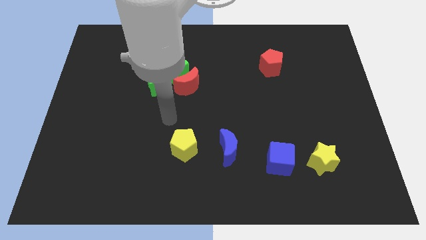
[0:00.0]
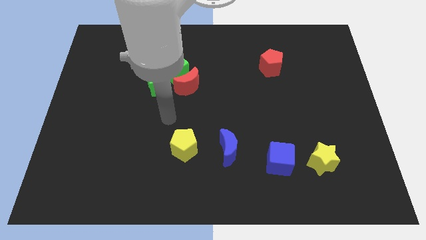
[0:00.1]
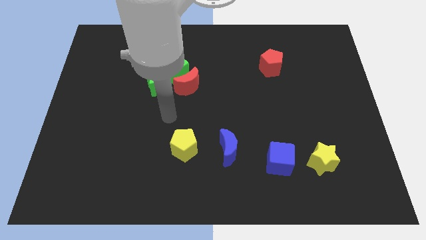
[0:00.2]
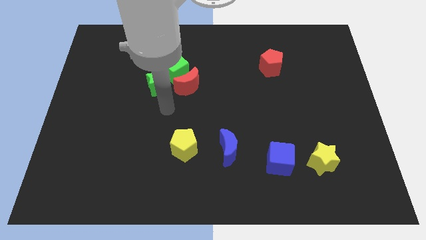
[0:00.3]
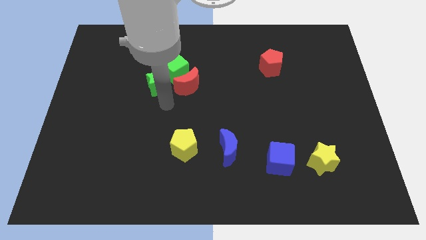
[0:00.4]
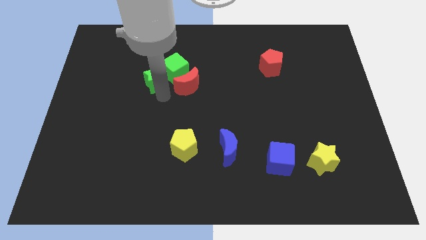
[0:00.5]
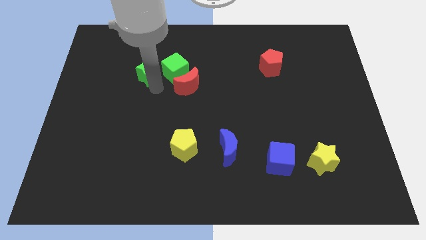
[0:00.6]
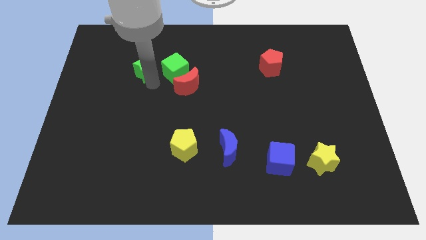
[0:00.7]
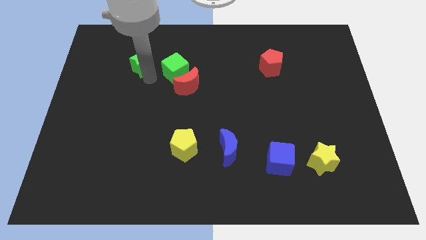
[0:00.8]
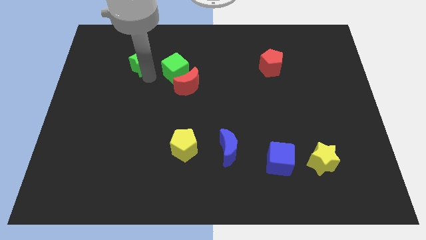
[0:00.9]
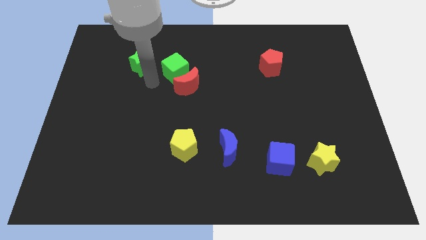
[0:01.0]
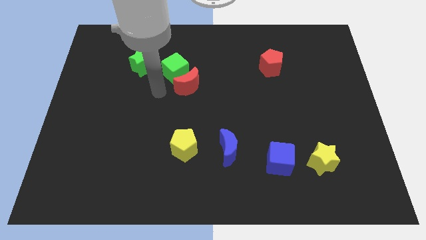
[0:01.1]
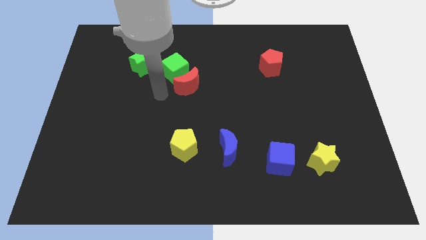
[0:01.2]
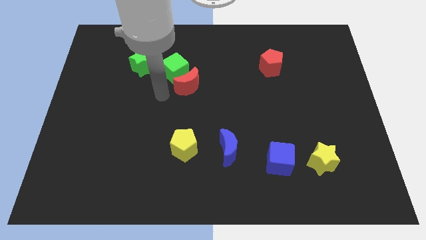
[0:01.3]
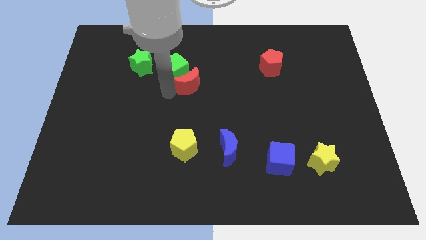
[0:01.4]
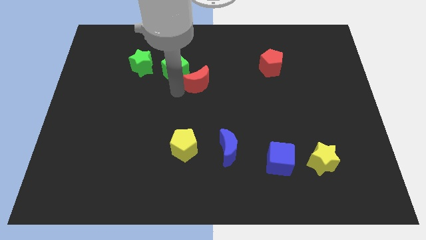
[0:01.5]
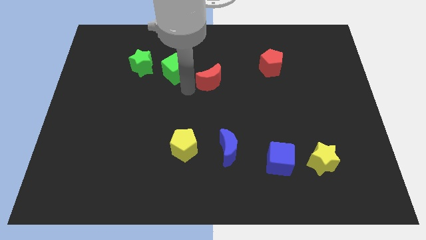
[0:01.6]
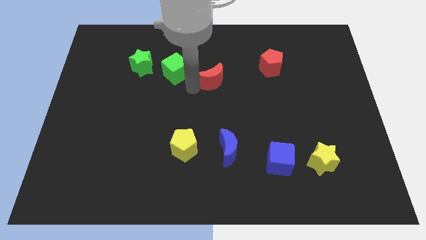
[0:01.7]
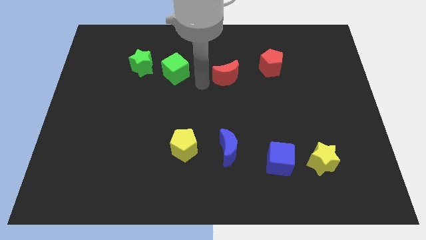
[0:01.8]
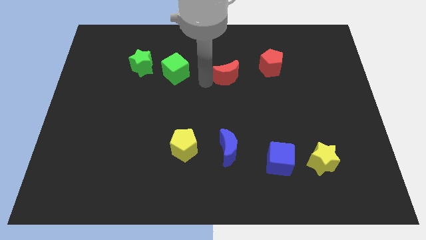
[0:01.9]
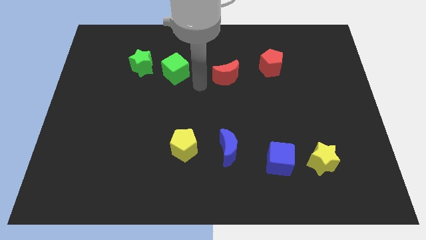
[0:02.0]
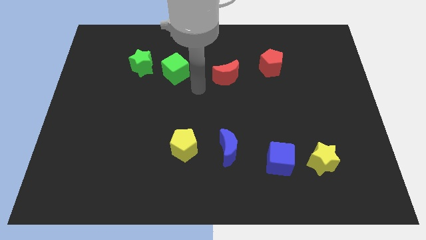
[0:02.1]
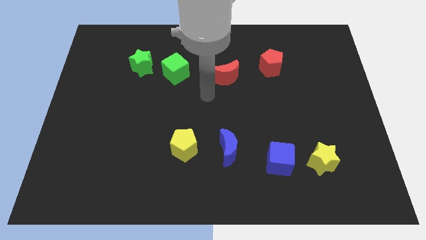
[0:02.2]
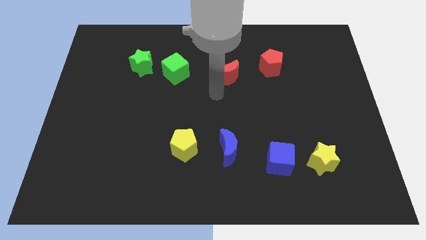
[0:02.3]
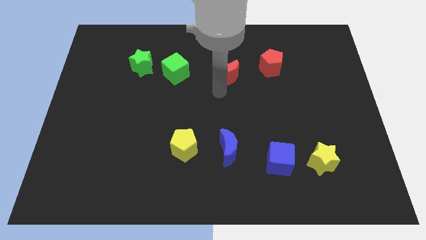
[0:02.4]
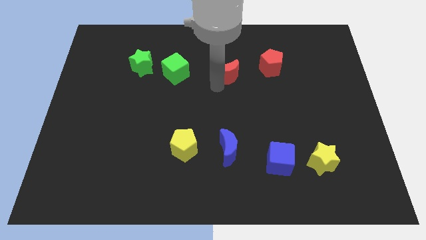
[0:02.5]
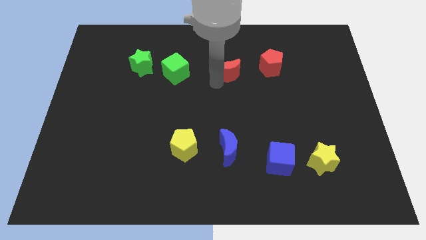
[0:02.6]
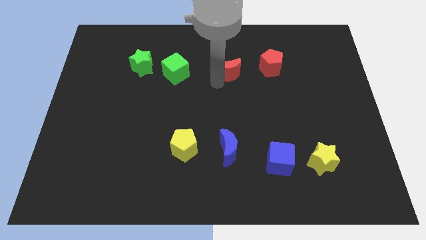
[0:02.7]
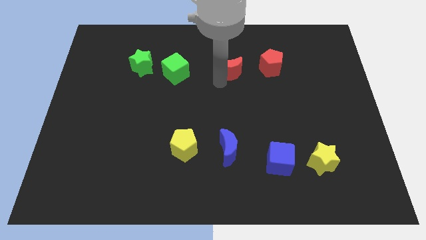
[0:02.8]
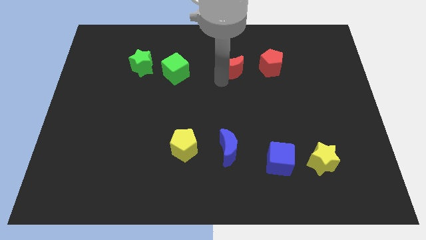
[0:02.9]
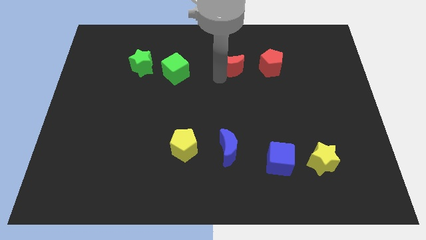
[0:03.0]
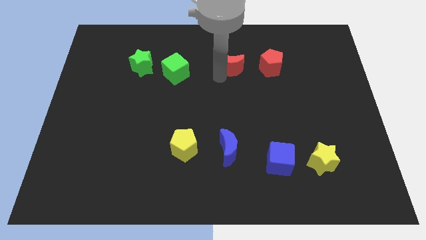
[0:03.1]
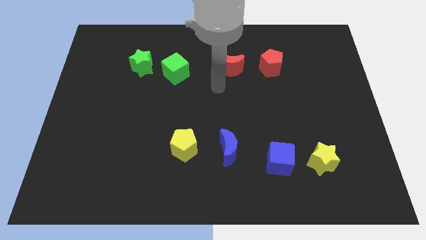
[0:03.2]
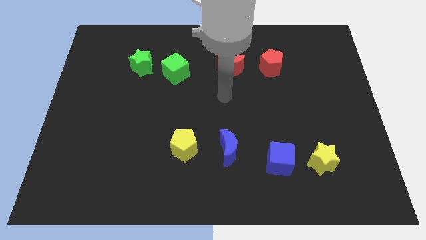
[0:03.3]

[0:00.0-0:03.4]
move the red moon towards the center top of the board

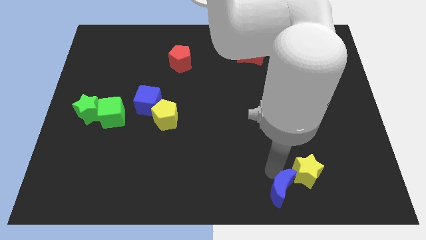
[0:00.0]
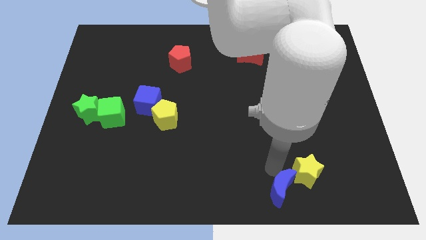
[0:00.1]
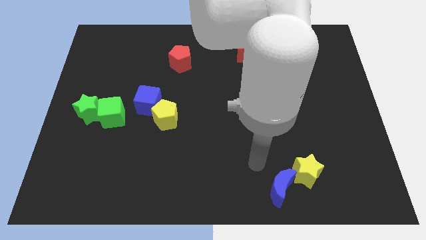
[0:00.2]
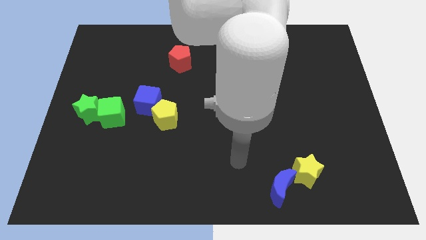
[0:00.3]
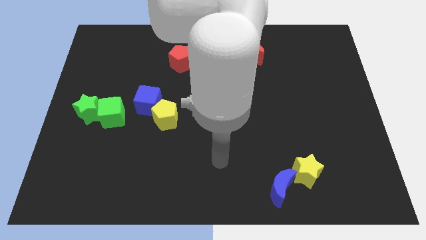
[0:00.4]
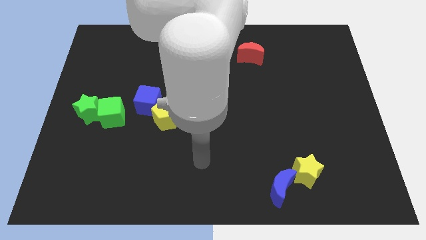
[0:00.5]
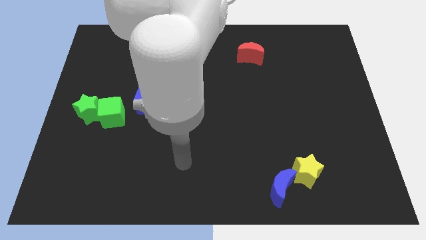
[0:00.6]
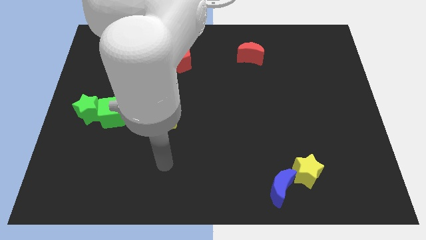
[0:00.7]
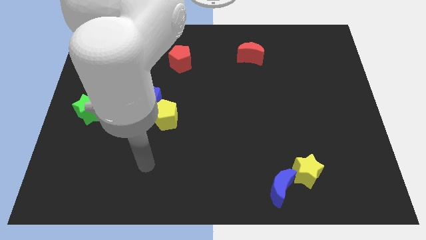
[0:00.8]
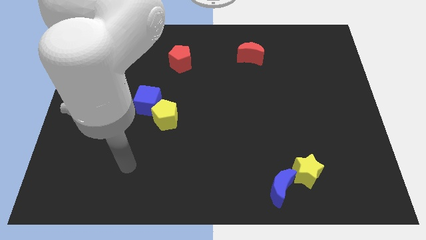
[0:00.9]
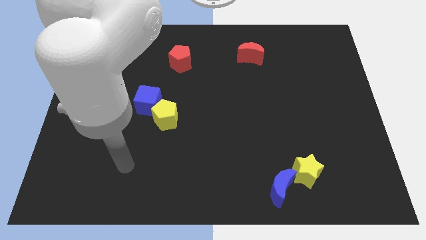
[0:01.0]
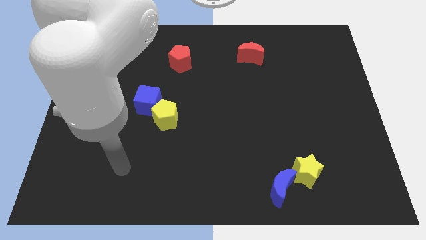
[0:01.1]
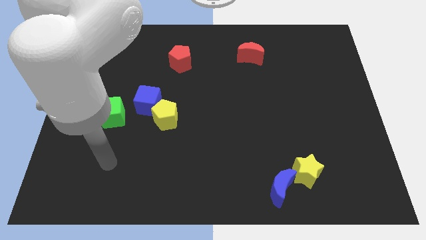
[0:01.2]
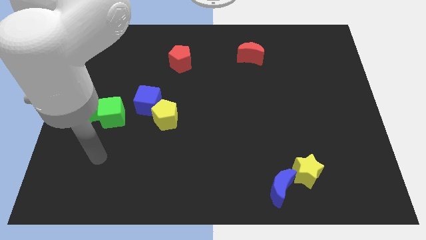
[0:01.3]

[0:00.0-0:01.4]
move the arm away from the blue crescent

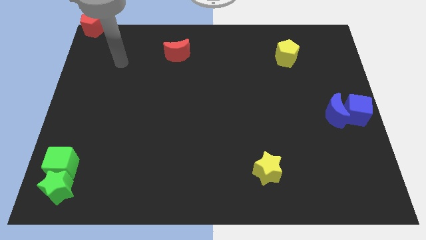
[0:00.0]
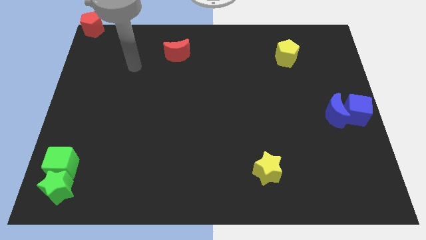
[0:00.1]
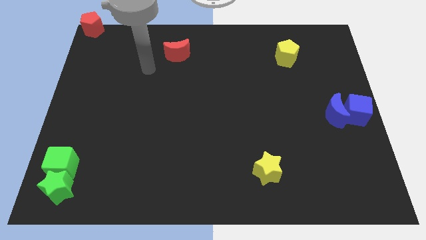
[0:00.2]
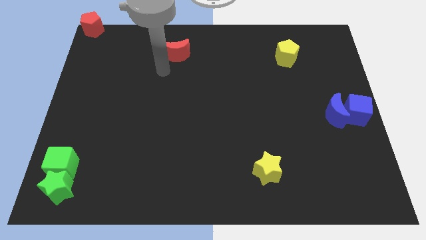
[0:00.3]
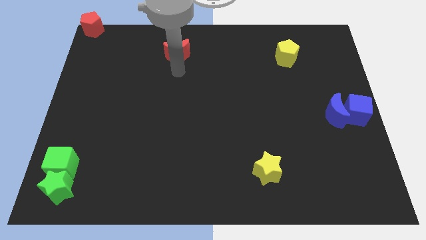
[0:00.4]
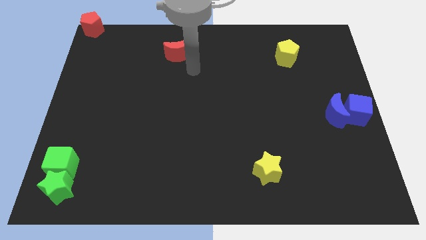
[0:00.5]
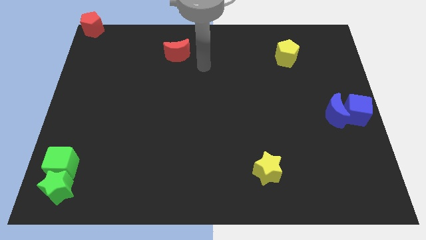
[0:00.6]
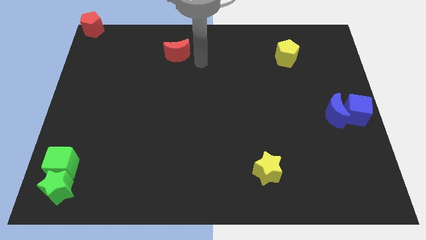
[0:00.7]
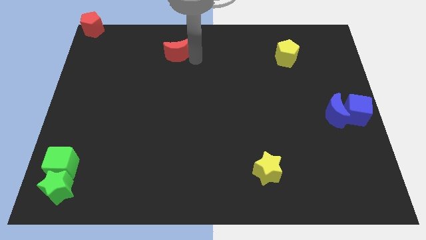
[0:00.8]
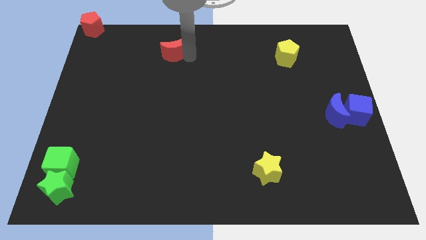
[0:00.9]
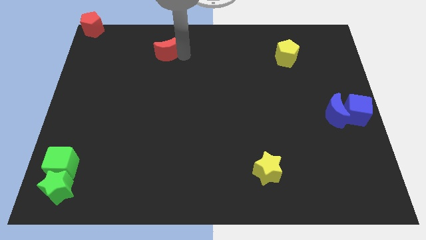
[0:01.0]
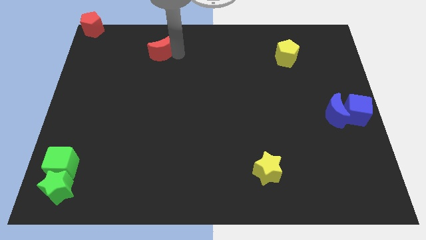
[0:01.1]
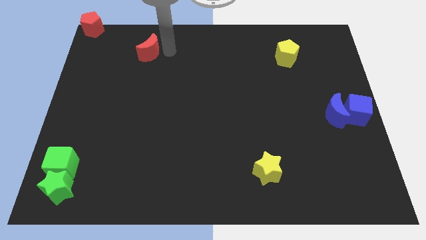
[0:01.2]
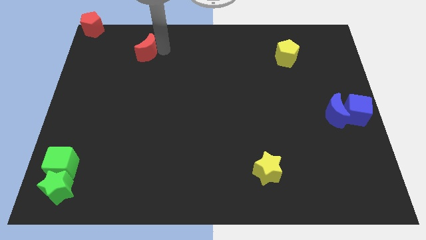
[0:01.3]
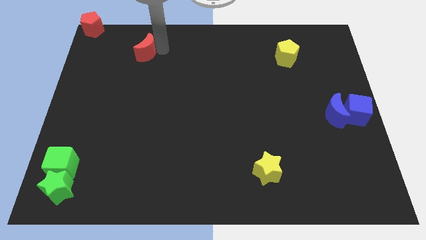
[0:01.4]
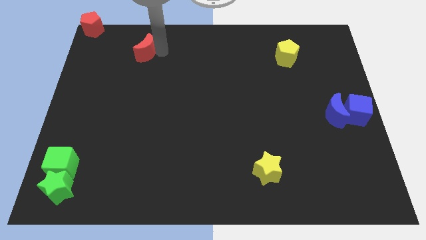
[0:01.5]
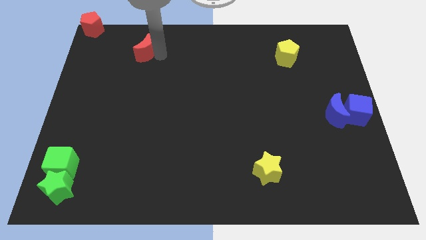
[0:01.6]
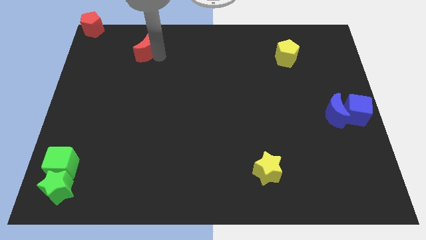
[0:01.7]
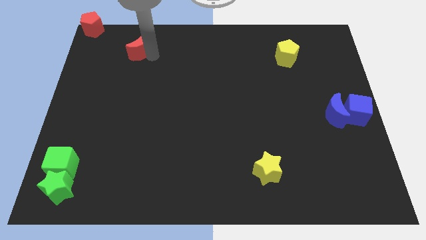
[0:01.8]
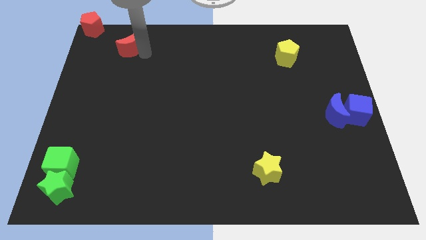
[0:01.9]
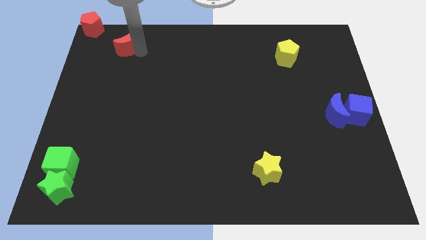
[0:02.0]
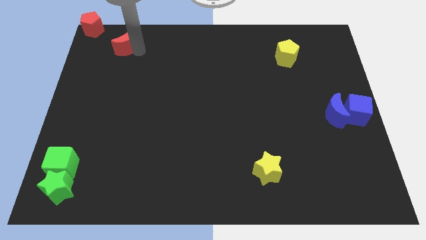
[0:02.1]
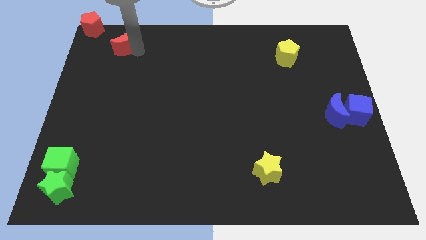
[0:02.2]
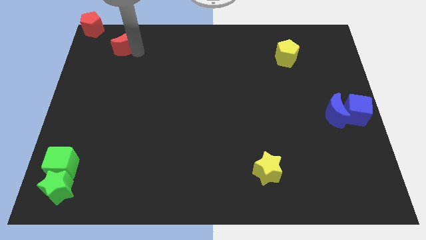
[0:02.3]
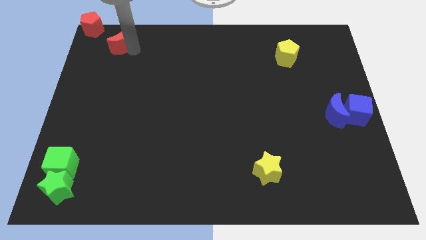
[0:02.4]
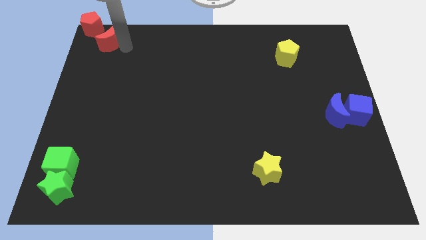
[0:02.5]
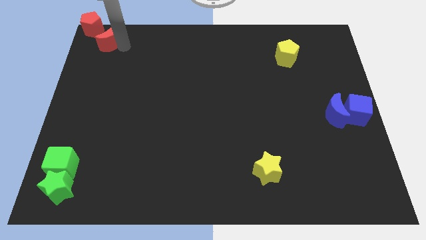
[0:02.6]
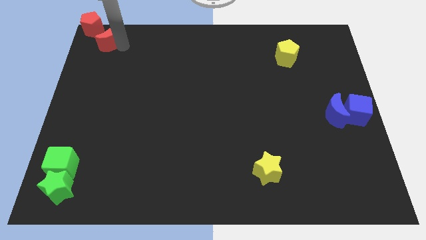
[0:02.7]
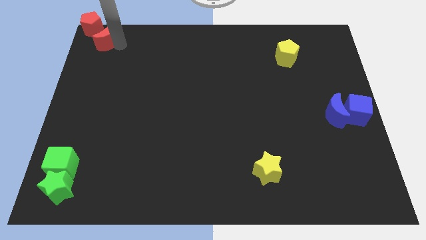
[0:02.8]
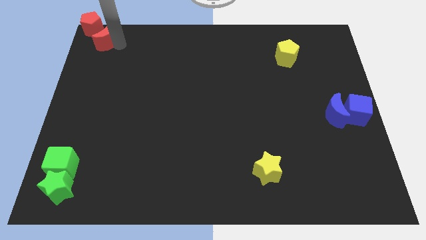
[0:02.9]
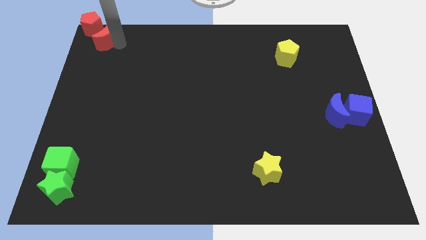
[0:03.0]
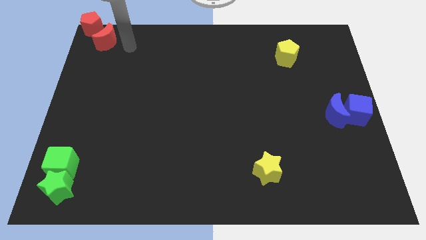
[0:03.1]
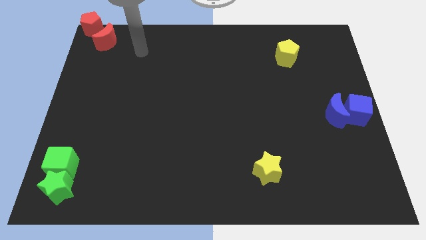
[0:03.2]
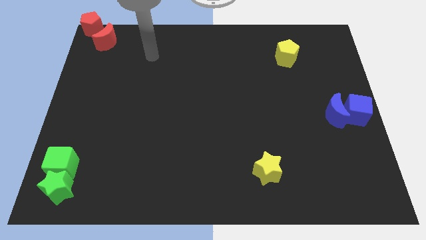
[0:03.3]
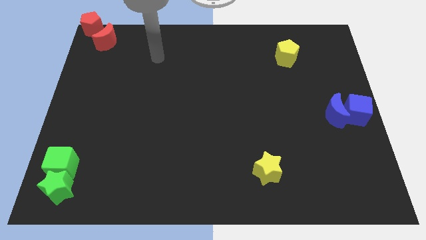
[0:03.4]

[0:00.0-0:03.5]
drag the red crescent towards the red pentagon

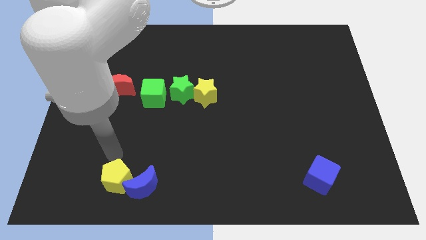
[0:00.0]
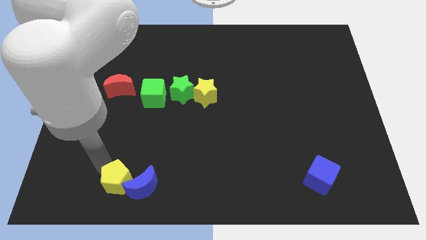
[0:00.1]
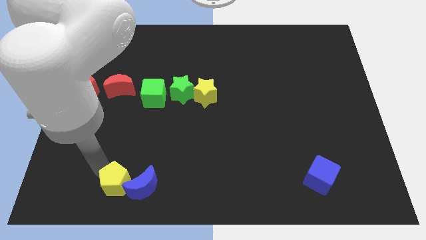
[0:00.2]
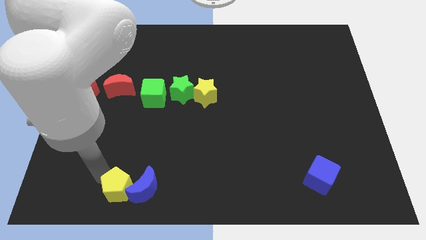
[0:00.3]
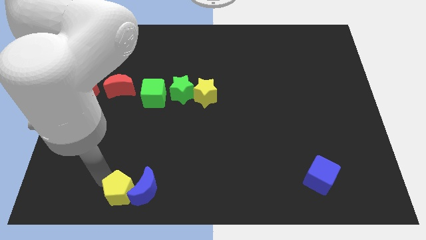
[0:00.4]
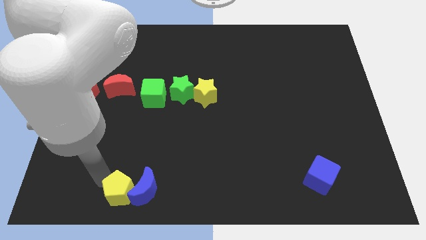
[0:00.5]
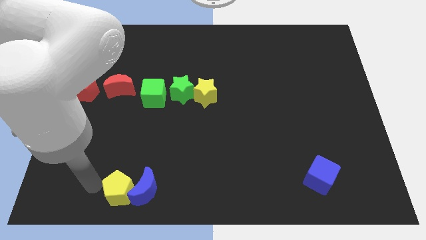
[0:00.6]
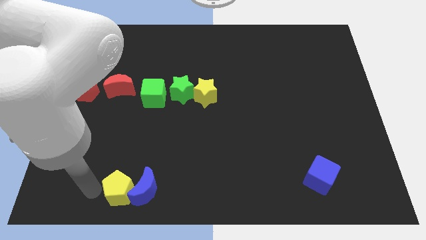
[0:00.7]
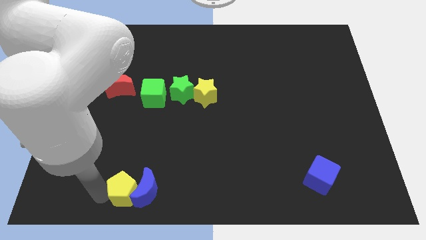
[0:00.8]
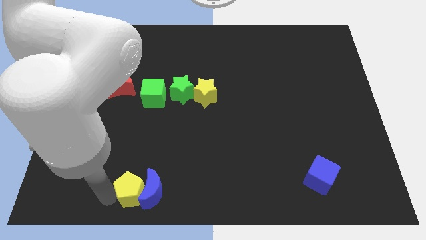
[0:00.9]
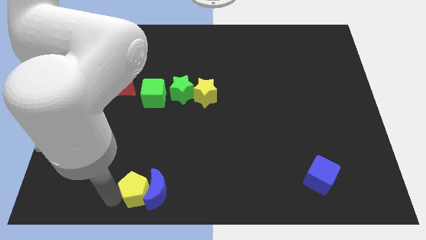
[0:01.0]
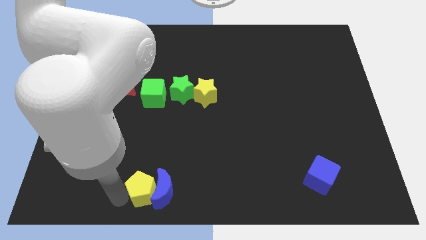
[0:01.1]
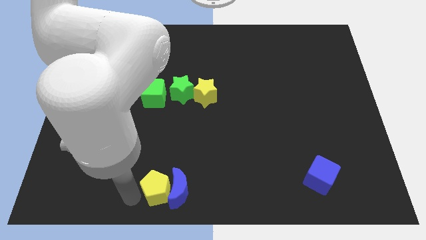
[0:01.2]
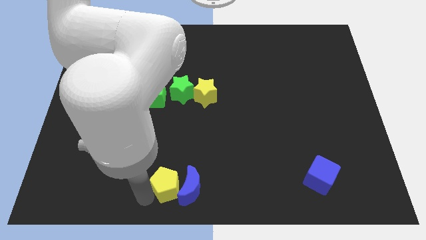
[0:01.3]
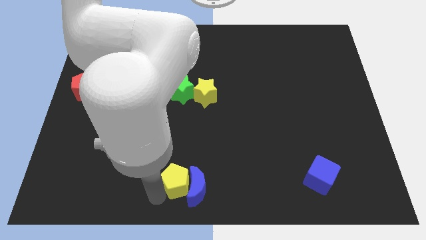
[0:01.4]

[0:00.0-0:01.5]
push the yellow pentagon along with the blue crescent slightly to the right
